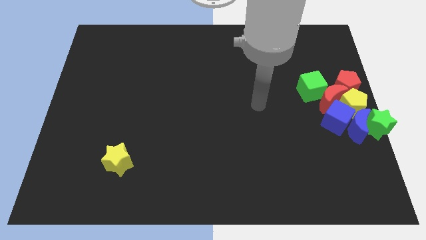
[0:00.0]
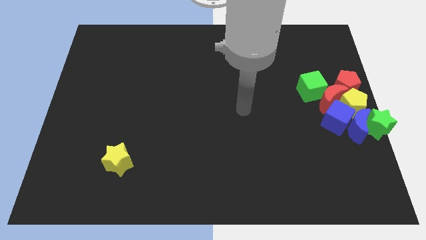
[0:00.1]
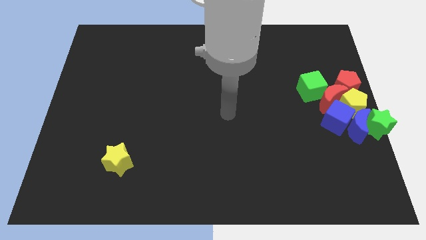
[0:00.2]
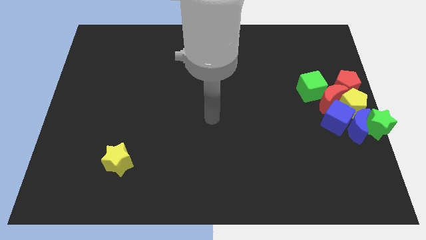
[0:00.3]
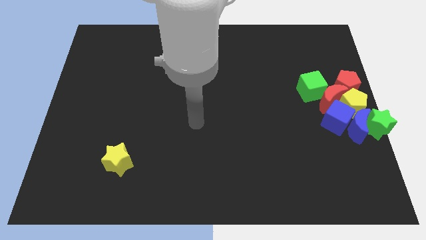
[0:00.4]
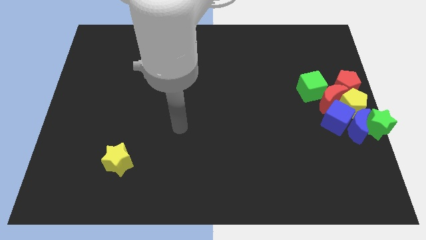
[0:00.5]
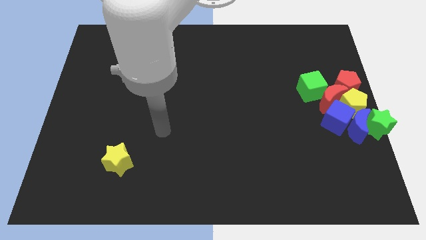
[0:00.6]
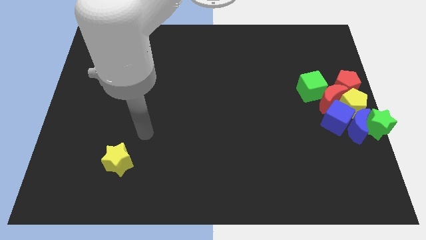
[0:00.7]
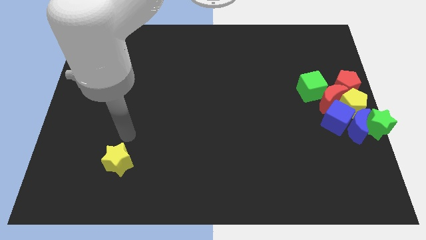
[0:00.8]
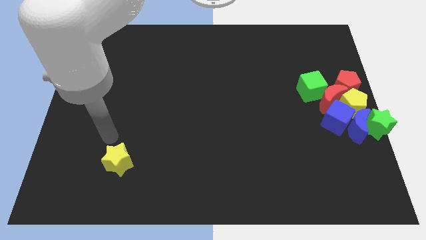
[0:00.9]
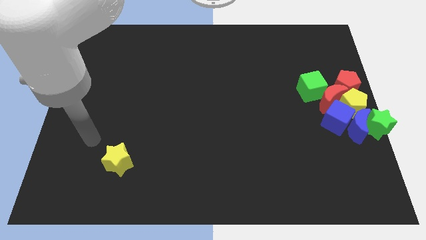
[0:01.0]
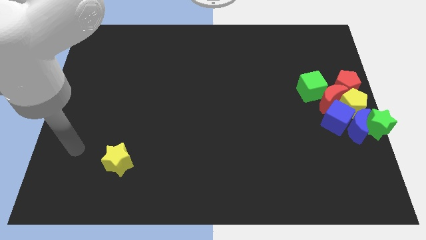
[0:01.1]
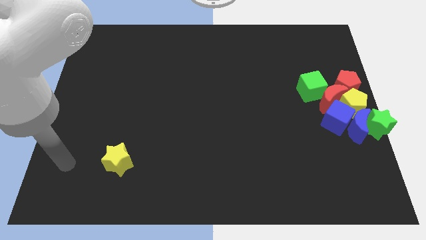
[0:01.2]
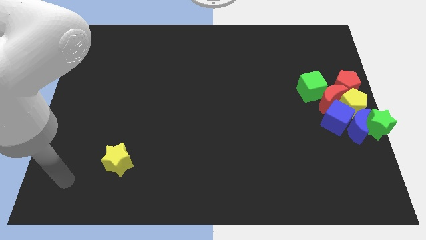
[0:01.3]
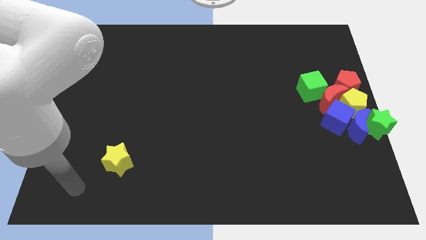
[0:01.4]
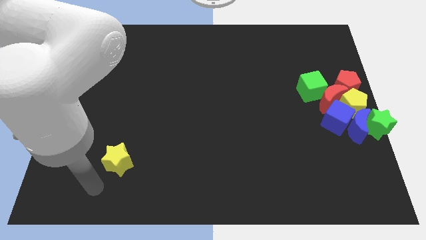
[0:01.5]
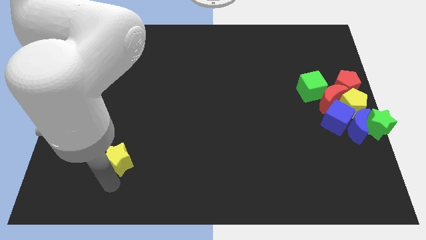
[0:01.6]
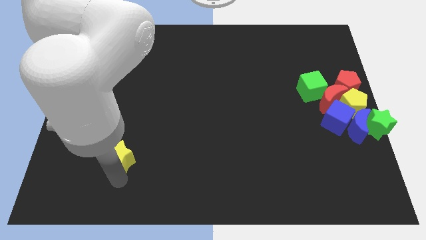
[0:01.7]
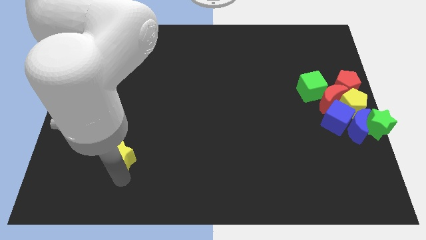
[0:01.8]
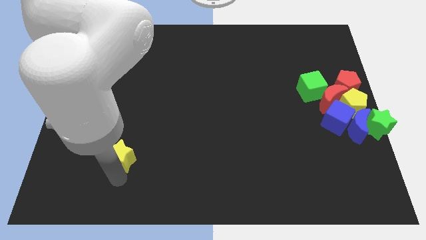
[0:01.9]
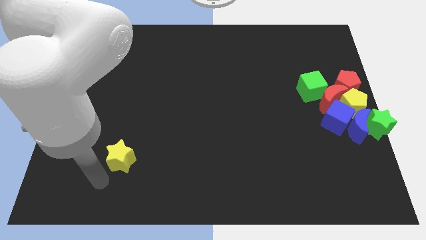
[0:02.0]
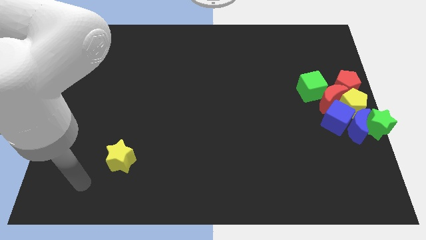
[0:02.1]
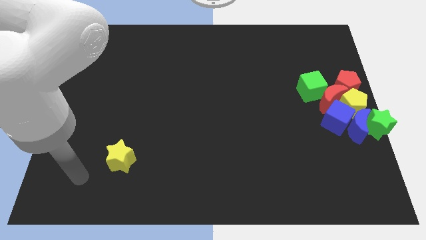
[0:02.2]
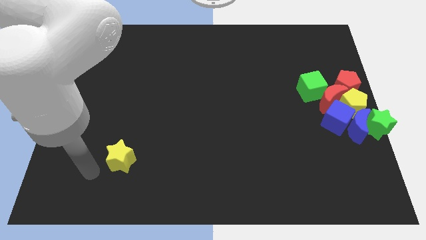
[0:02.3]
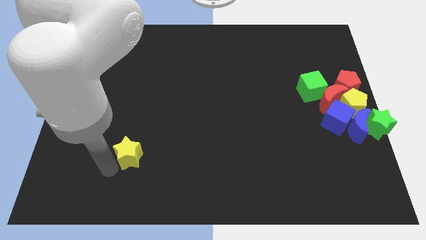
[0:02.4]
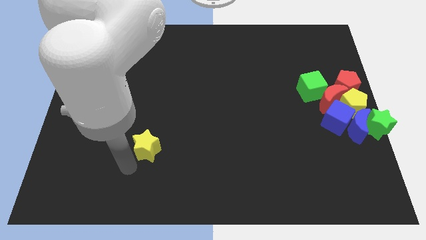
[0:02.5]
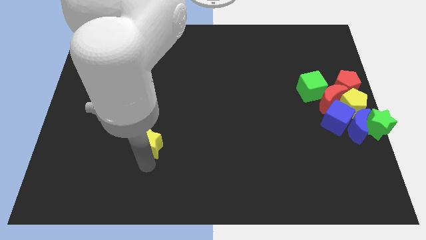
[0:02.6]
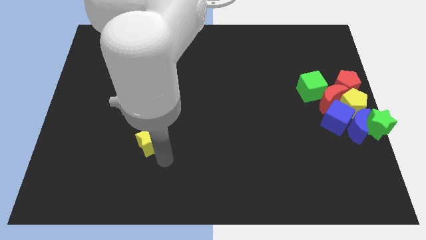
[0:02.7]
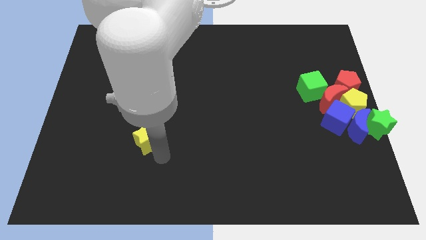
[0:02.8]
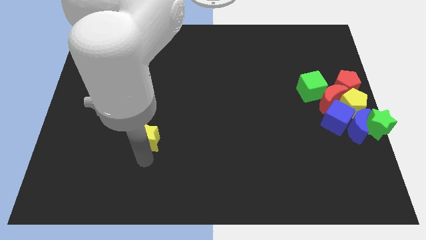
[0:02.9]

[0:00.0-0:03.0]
push yellow star slightly towards upward

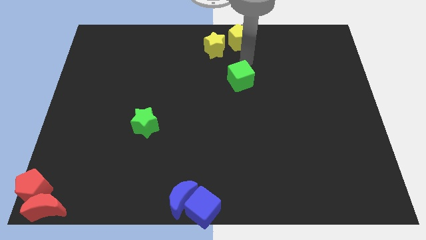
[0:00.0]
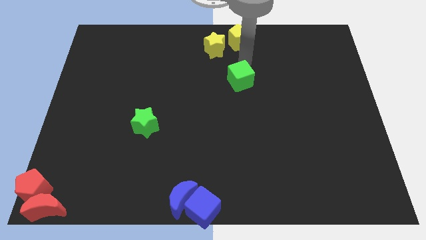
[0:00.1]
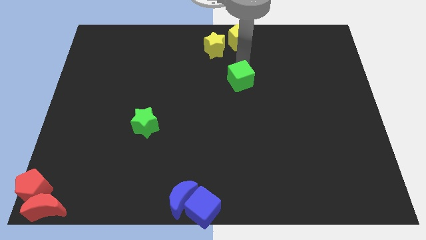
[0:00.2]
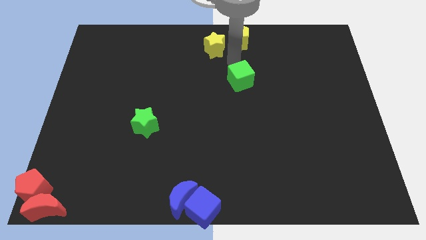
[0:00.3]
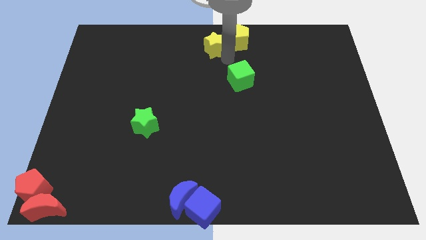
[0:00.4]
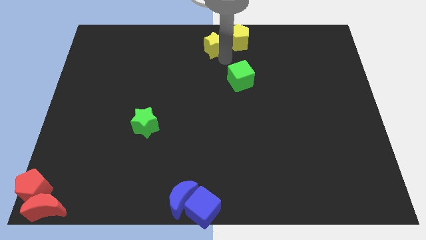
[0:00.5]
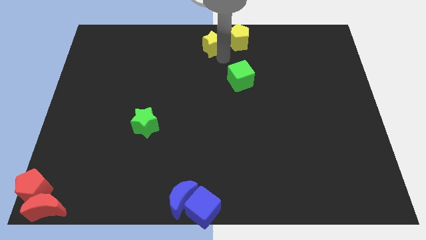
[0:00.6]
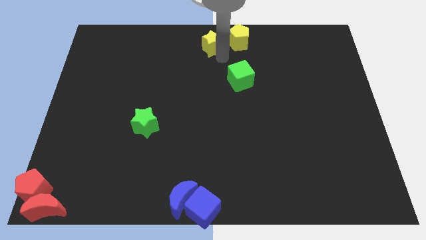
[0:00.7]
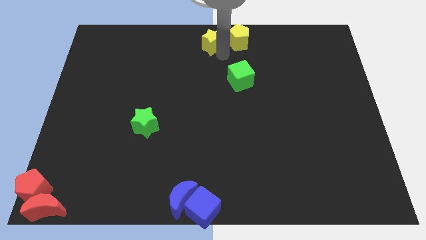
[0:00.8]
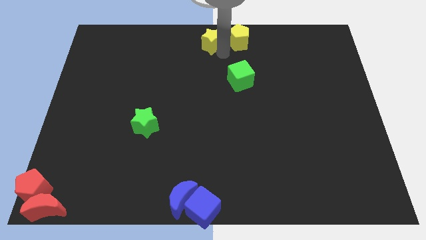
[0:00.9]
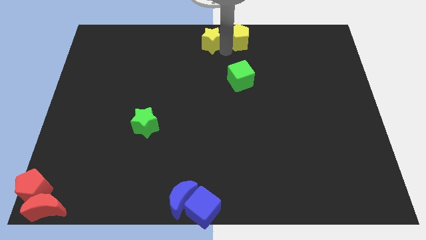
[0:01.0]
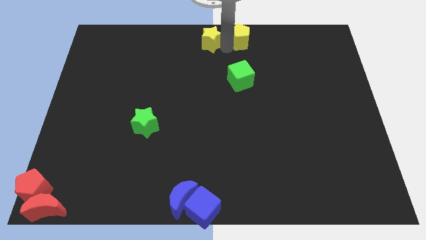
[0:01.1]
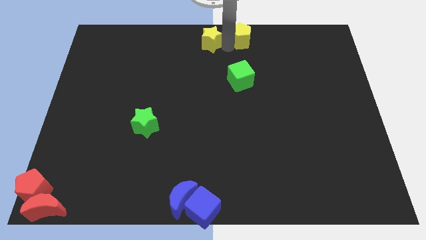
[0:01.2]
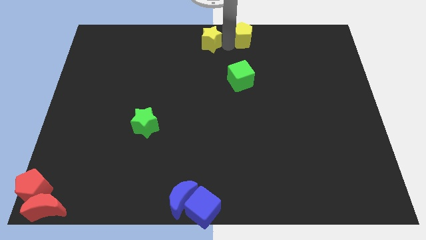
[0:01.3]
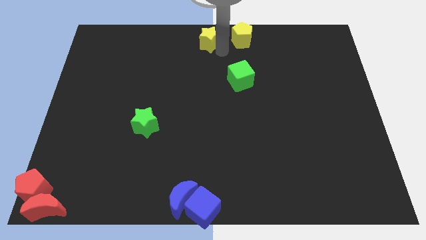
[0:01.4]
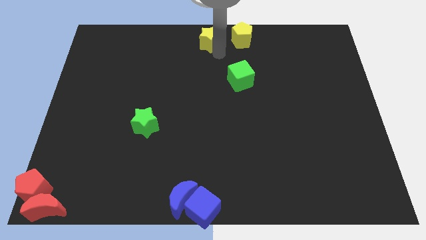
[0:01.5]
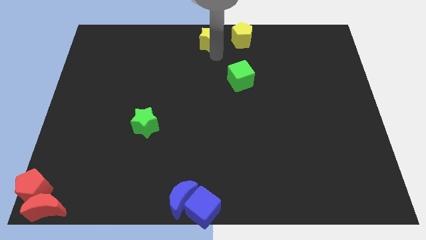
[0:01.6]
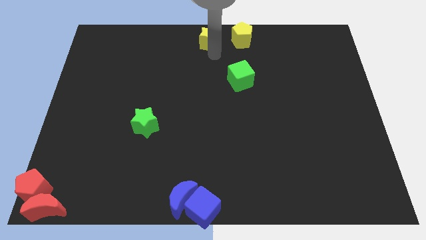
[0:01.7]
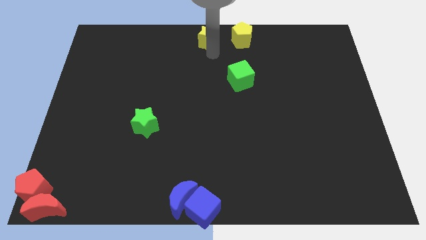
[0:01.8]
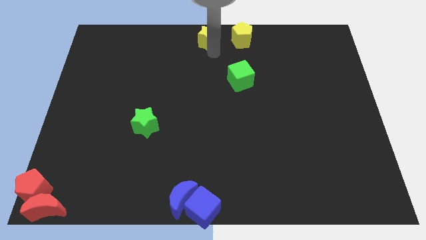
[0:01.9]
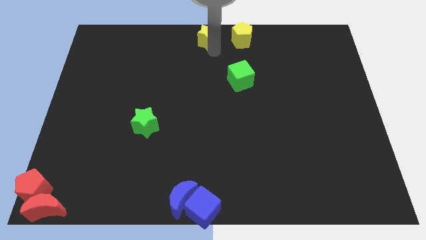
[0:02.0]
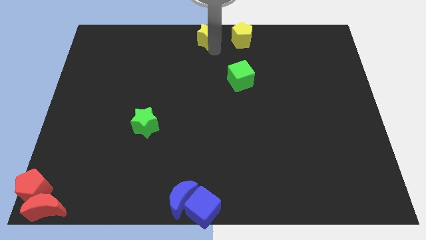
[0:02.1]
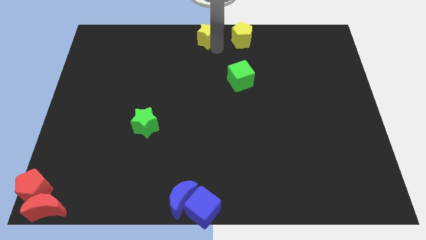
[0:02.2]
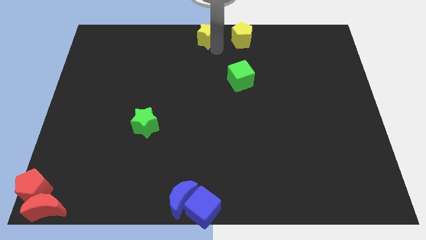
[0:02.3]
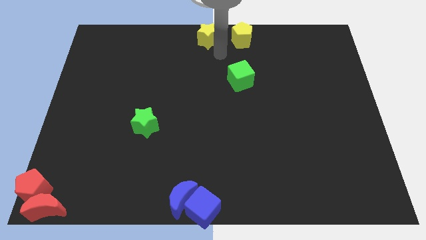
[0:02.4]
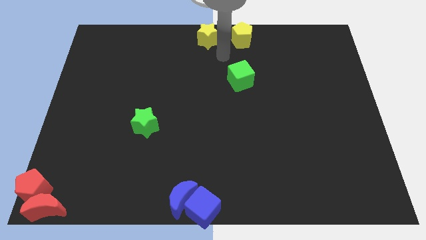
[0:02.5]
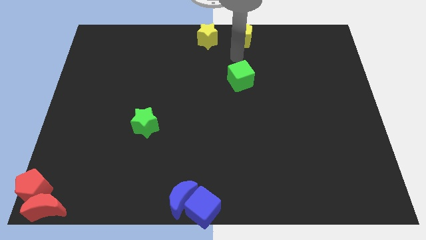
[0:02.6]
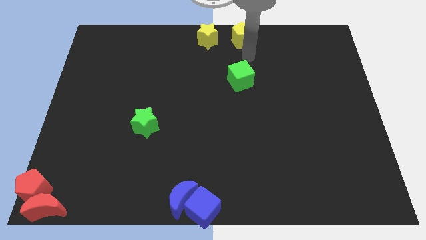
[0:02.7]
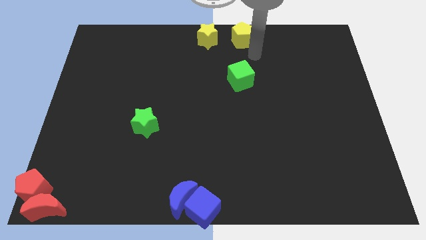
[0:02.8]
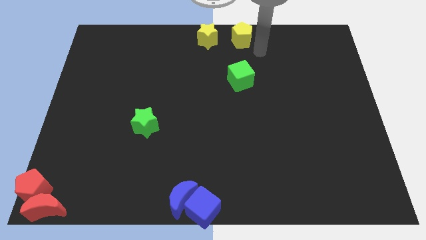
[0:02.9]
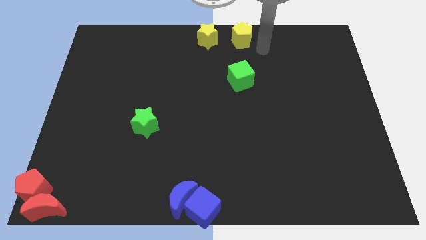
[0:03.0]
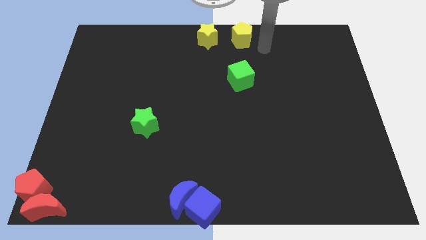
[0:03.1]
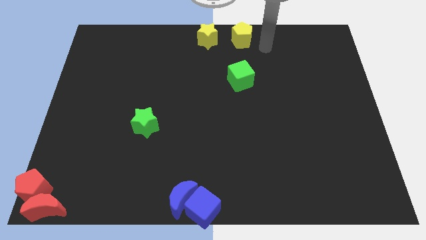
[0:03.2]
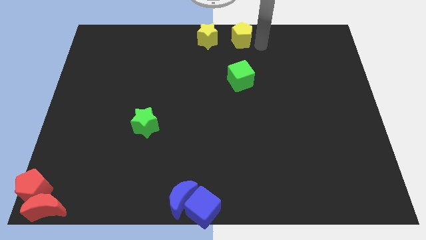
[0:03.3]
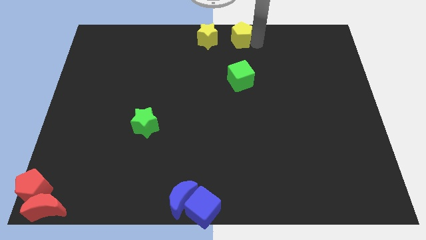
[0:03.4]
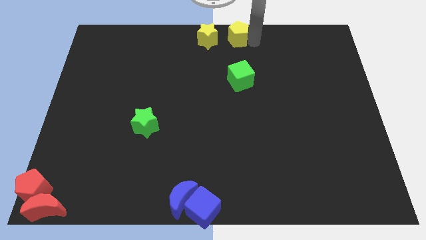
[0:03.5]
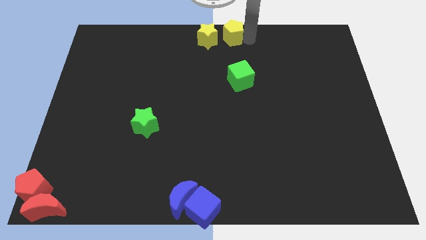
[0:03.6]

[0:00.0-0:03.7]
place the yellow star and yellow pentagon towards the top center of the board

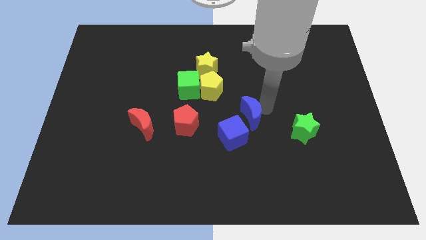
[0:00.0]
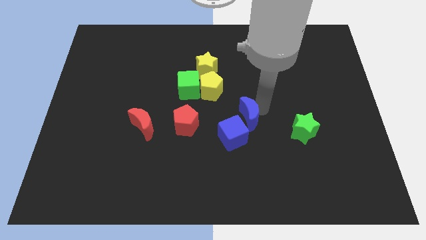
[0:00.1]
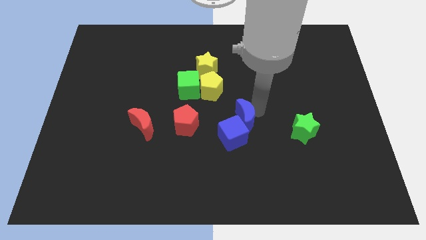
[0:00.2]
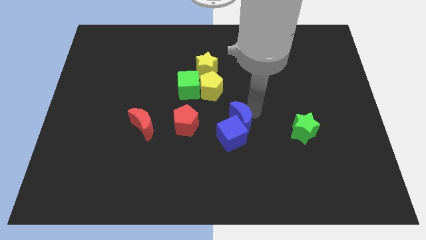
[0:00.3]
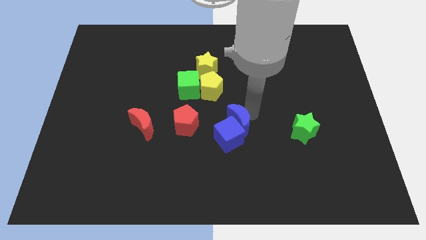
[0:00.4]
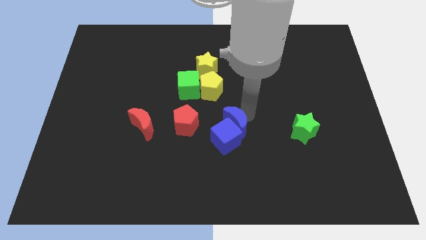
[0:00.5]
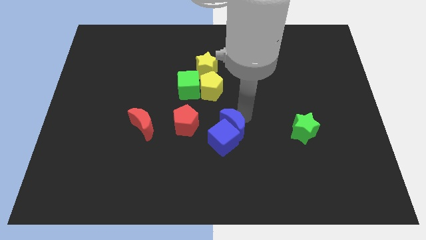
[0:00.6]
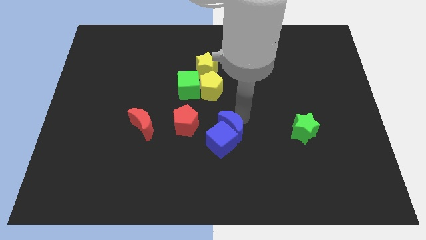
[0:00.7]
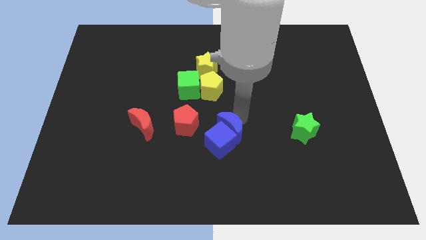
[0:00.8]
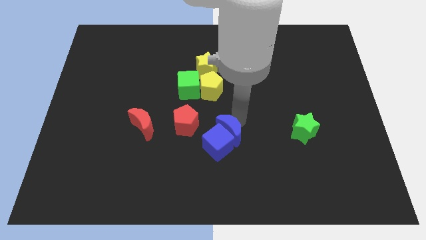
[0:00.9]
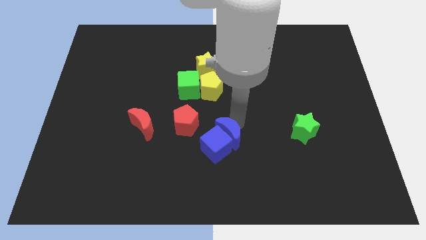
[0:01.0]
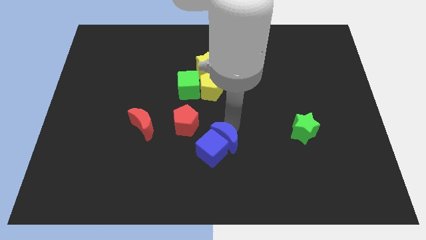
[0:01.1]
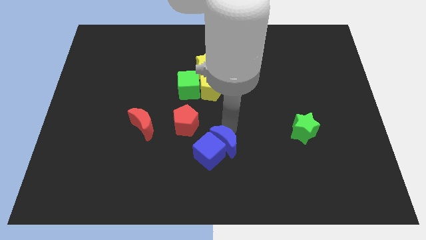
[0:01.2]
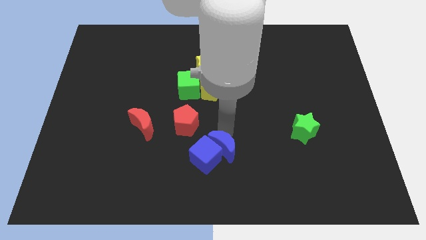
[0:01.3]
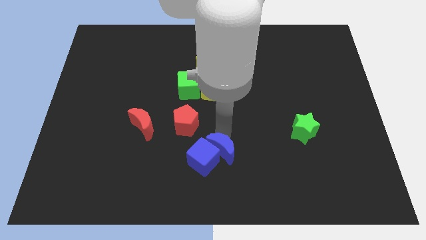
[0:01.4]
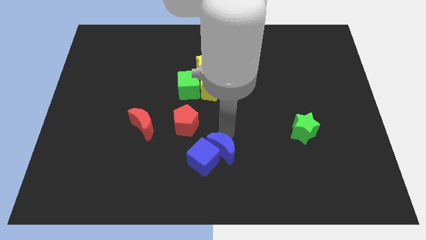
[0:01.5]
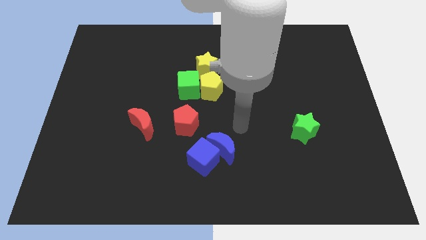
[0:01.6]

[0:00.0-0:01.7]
push the blue cube with the blue crescent towards the bottom center of the board

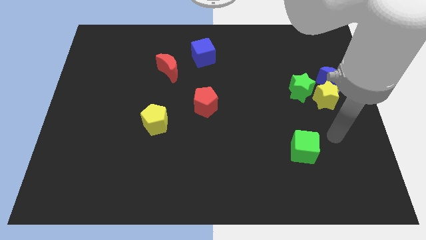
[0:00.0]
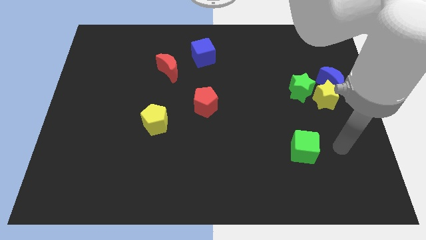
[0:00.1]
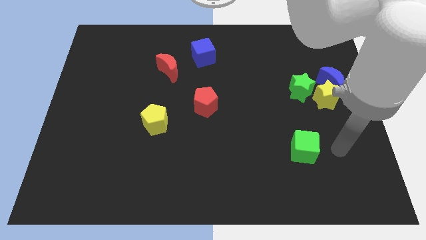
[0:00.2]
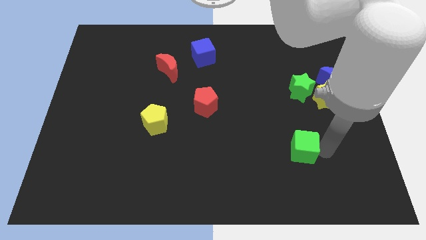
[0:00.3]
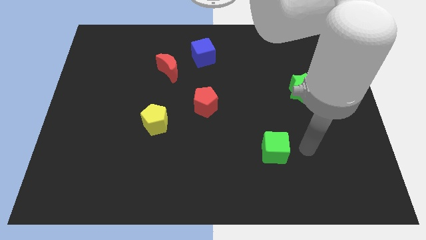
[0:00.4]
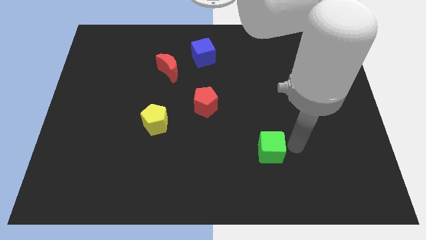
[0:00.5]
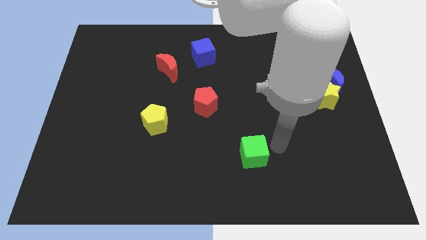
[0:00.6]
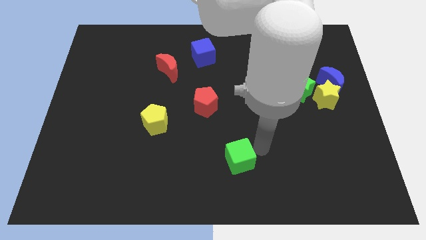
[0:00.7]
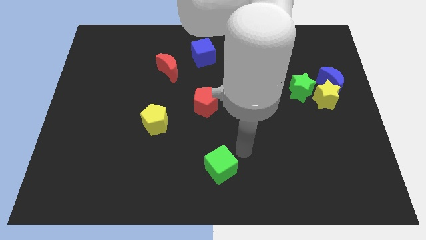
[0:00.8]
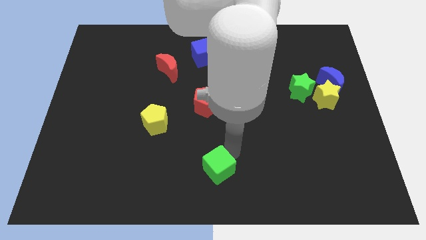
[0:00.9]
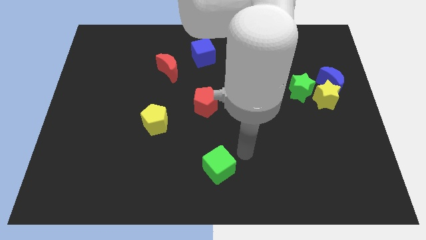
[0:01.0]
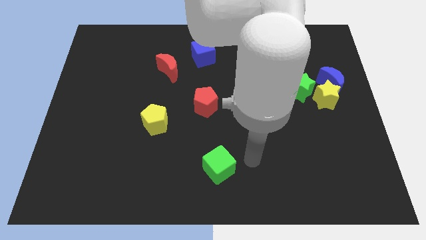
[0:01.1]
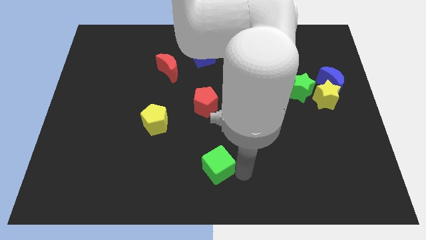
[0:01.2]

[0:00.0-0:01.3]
slide the green cube slightly to the left
